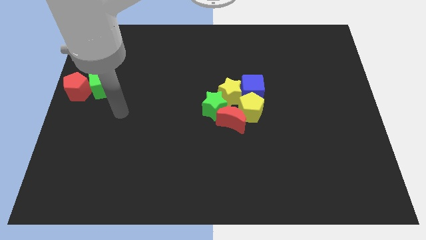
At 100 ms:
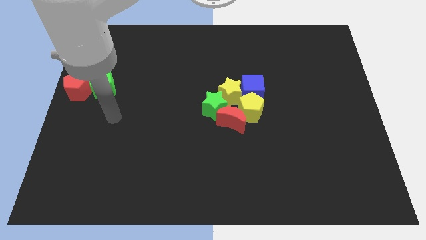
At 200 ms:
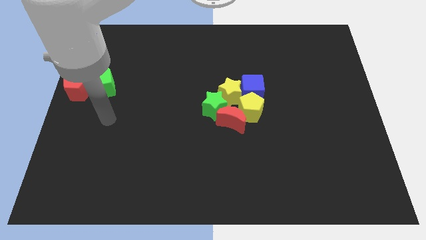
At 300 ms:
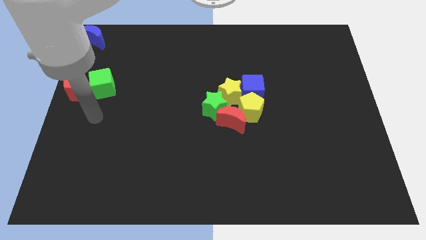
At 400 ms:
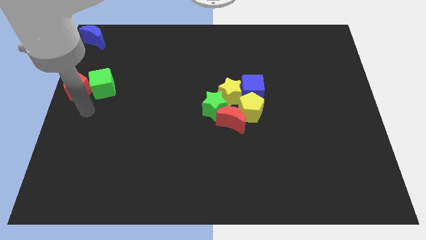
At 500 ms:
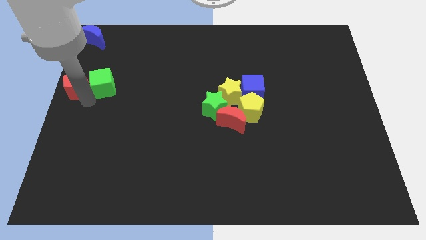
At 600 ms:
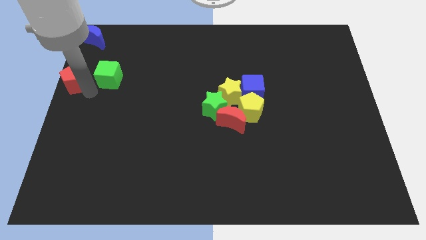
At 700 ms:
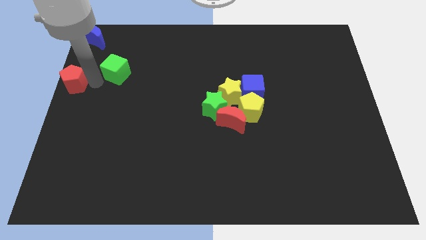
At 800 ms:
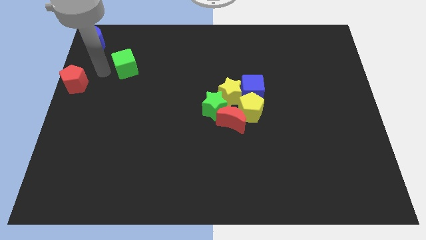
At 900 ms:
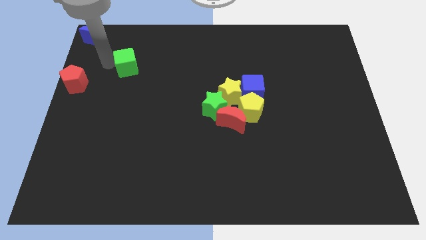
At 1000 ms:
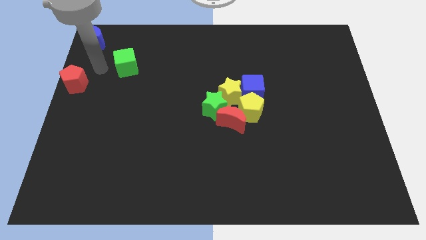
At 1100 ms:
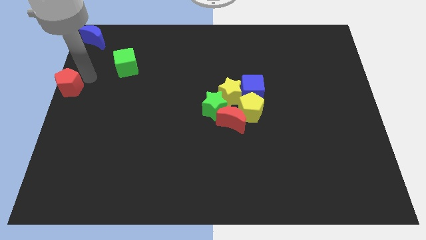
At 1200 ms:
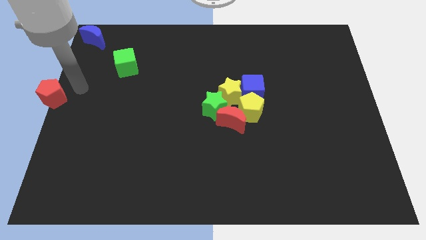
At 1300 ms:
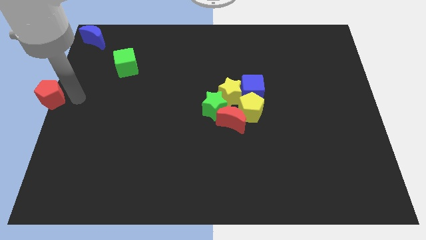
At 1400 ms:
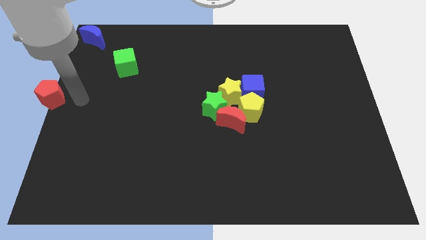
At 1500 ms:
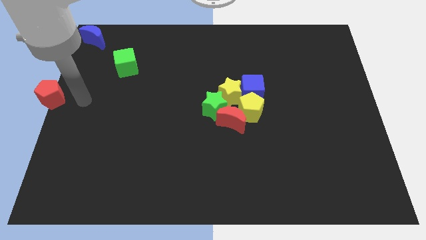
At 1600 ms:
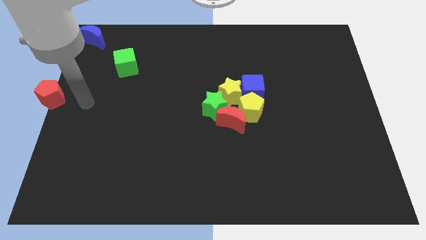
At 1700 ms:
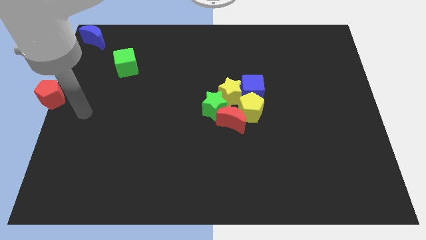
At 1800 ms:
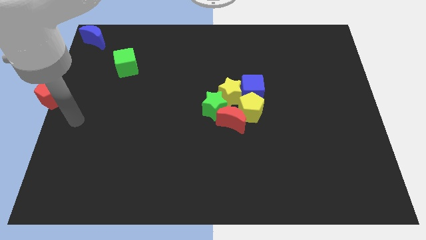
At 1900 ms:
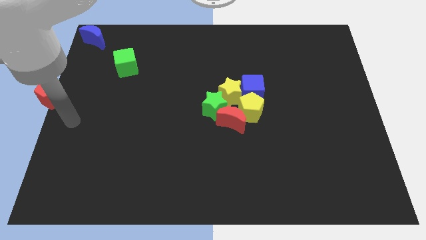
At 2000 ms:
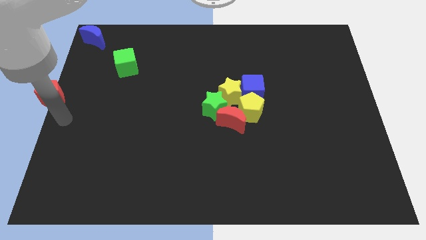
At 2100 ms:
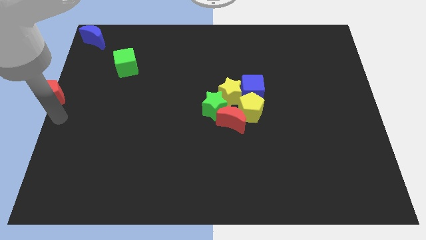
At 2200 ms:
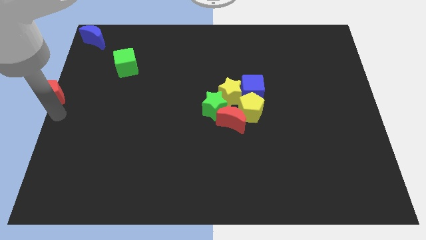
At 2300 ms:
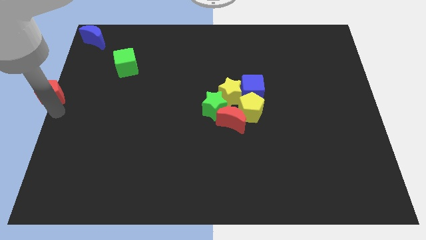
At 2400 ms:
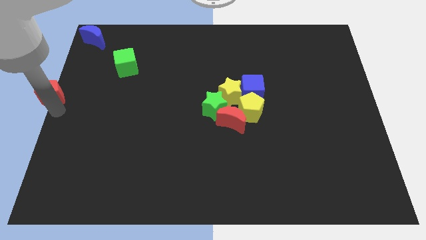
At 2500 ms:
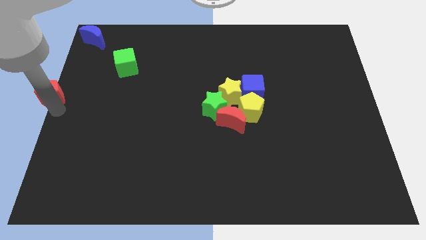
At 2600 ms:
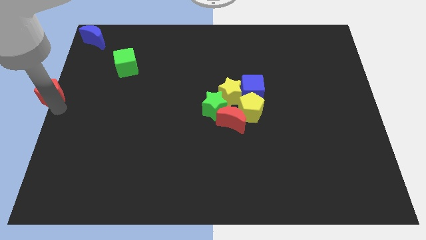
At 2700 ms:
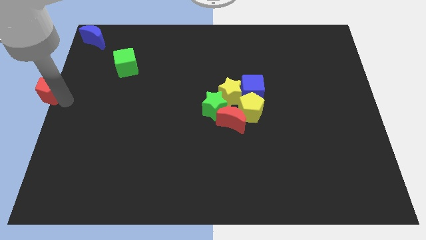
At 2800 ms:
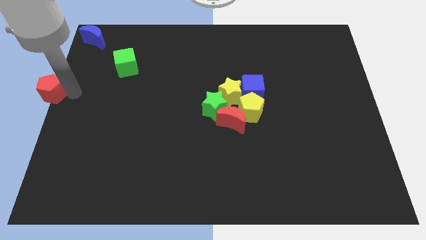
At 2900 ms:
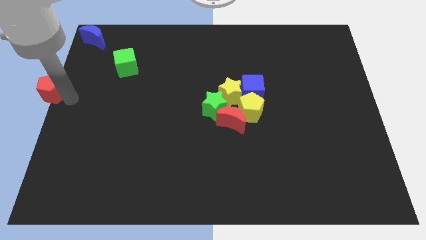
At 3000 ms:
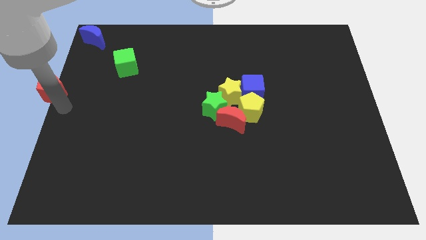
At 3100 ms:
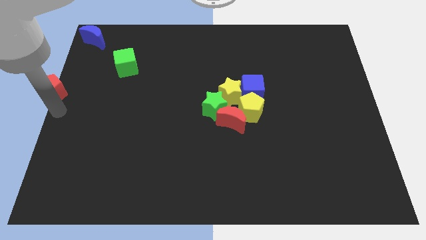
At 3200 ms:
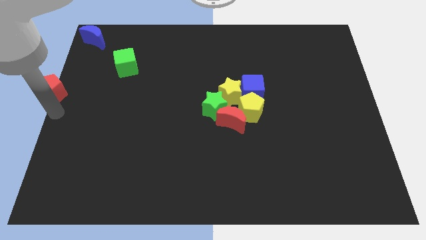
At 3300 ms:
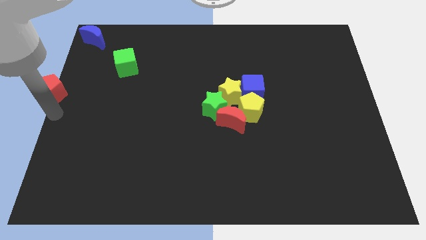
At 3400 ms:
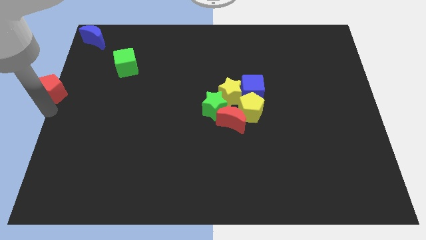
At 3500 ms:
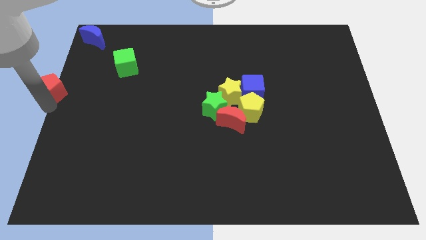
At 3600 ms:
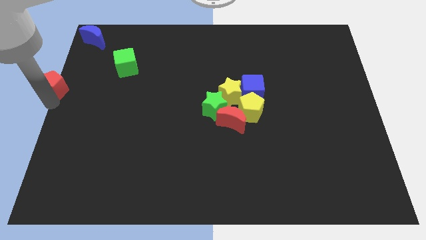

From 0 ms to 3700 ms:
separate the red pentagon from the green cube

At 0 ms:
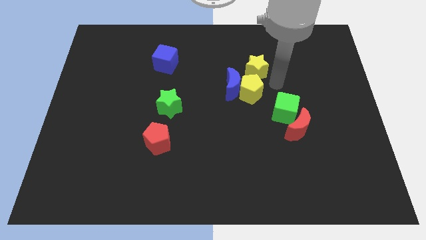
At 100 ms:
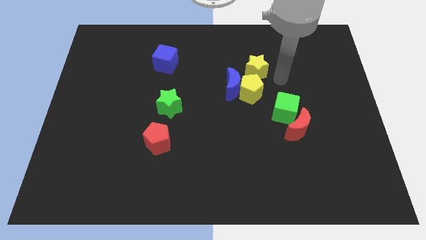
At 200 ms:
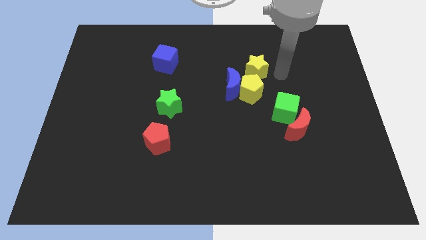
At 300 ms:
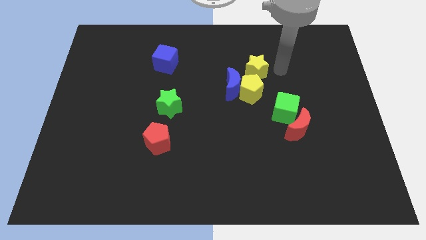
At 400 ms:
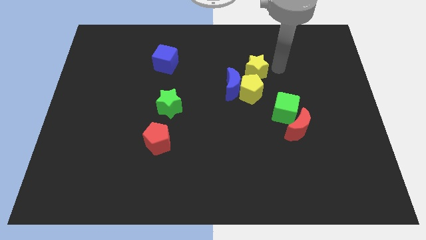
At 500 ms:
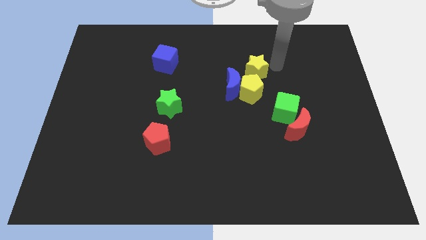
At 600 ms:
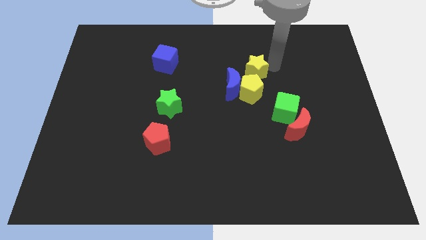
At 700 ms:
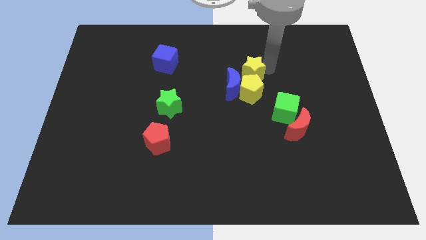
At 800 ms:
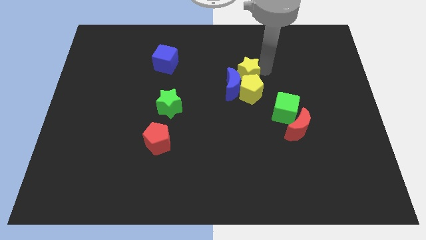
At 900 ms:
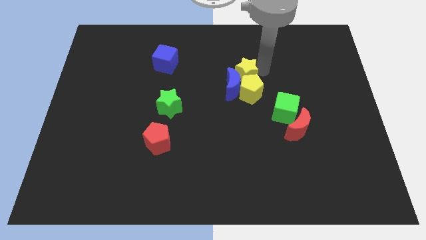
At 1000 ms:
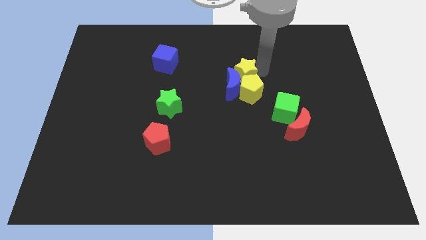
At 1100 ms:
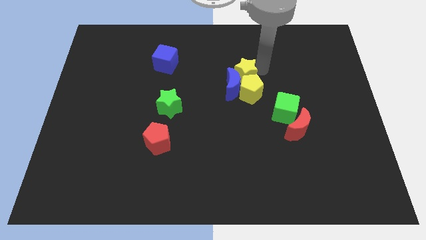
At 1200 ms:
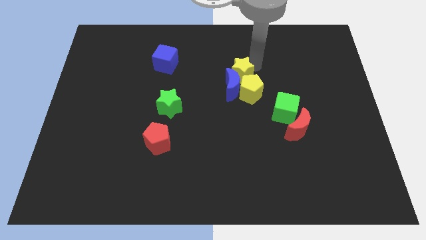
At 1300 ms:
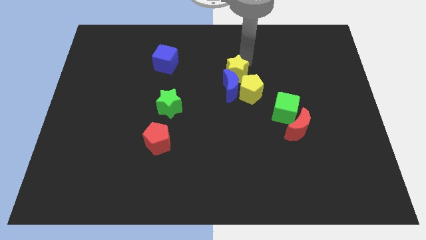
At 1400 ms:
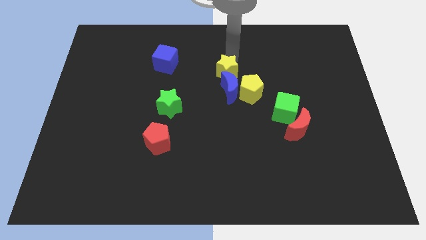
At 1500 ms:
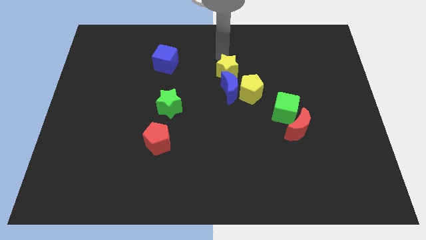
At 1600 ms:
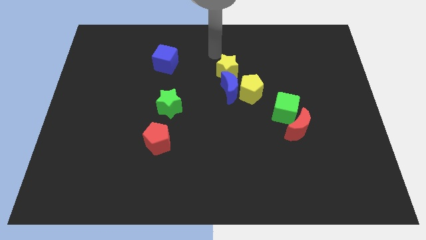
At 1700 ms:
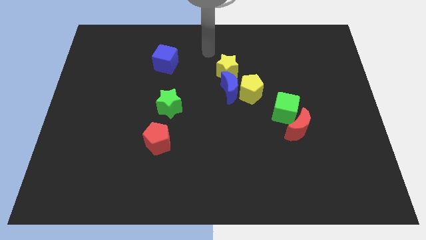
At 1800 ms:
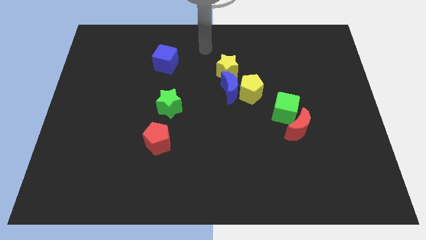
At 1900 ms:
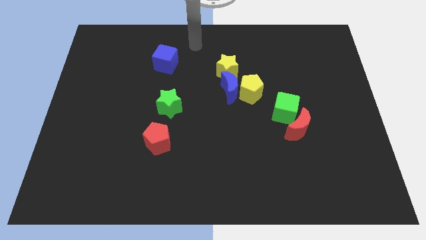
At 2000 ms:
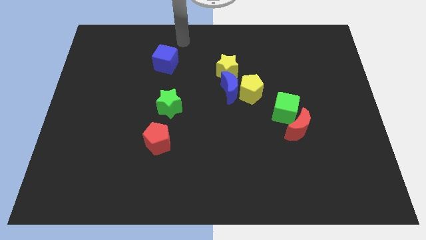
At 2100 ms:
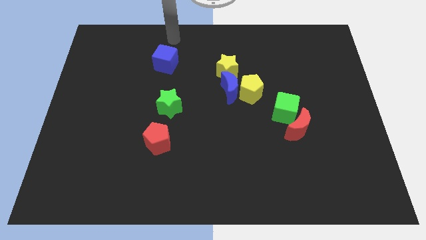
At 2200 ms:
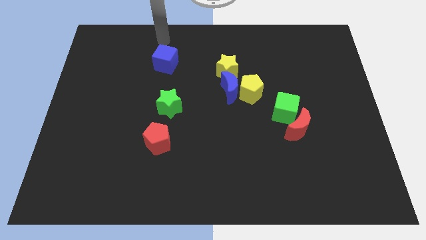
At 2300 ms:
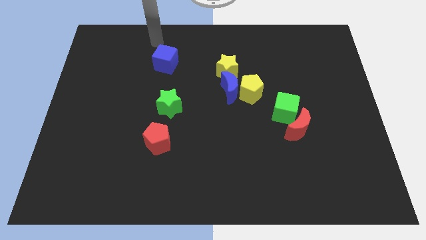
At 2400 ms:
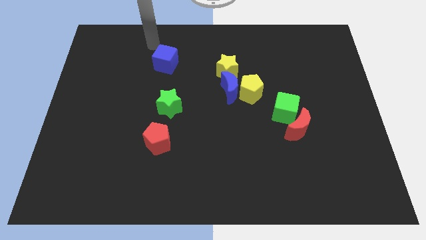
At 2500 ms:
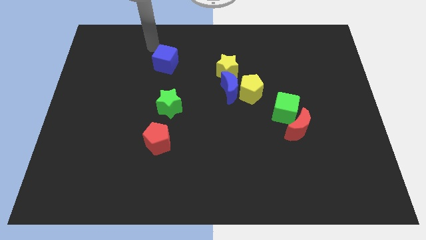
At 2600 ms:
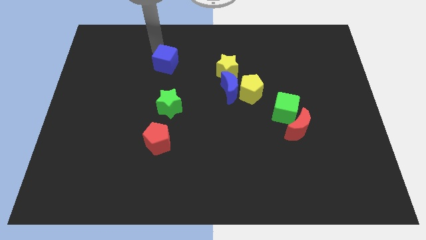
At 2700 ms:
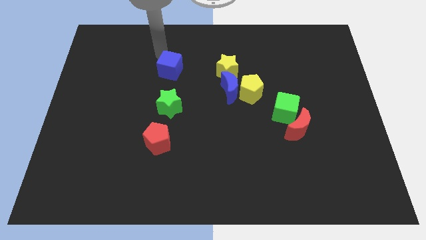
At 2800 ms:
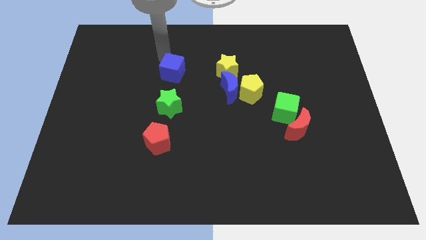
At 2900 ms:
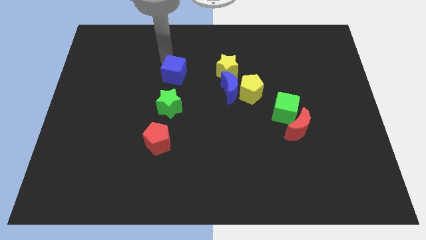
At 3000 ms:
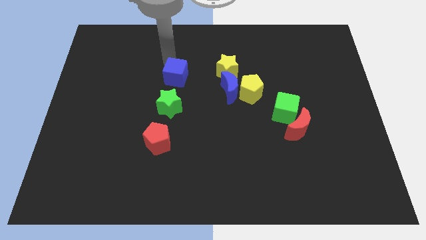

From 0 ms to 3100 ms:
place the blue cube left to the yellow star

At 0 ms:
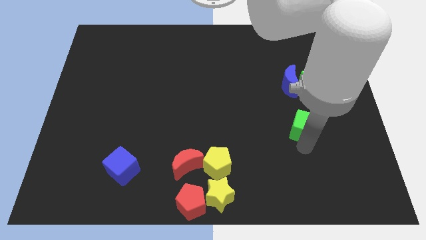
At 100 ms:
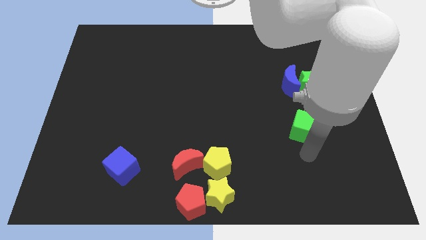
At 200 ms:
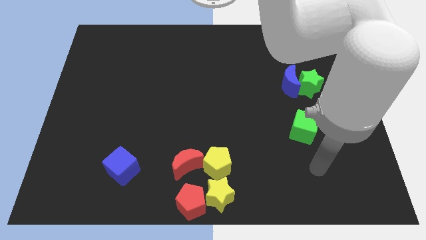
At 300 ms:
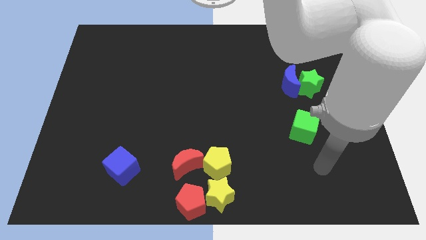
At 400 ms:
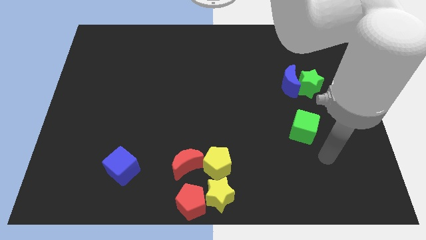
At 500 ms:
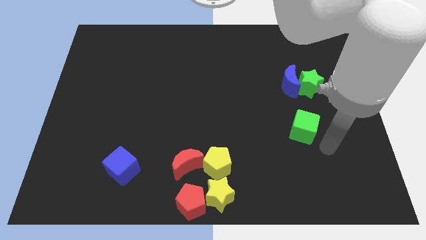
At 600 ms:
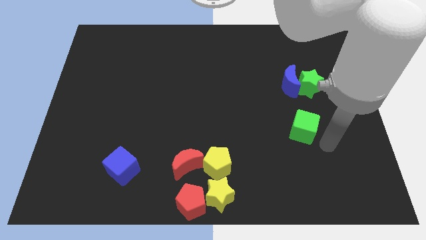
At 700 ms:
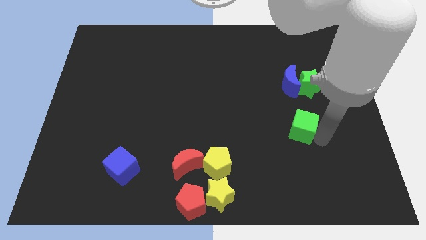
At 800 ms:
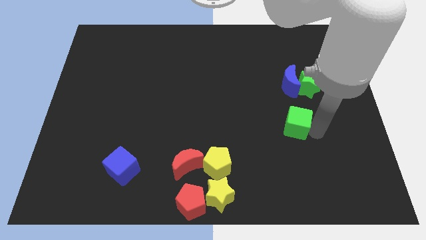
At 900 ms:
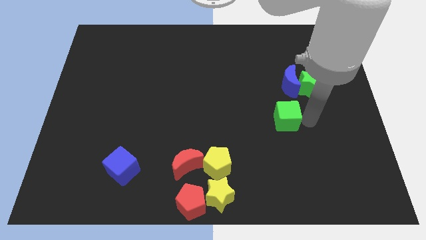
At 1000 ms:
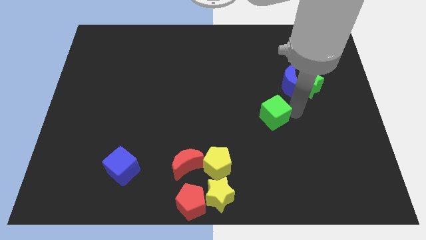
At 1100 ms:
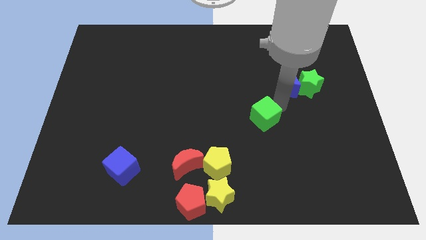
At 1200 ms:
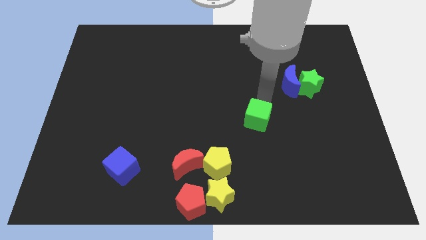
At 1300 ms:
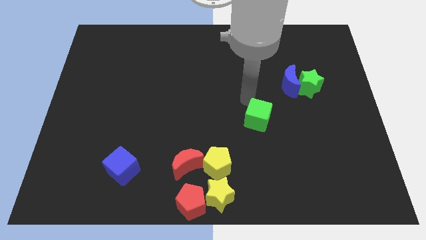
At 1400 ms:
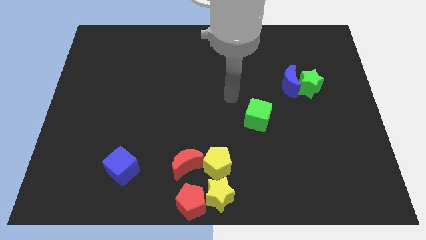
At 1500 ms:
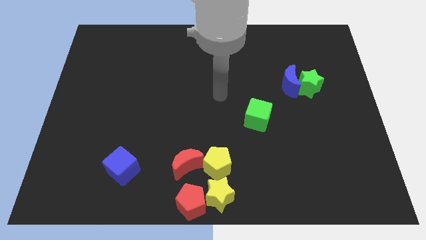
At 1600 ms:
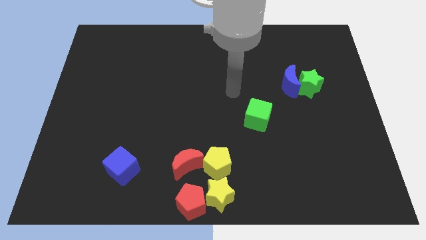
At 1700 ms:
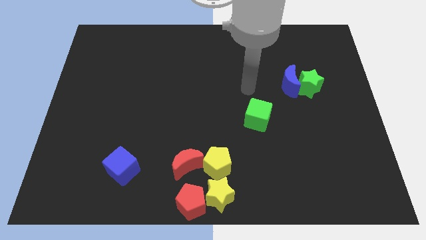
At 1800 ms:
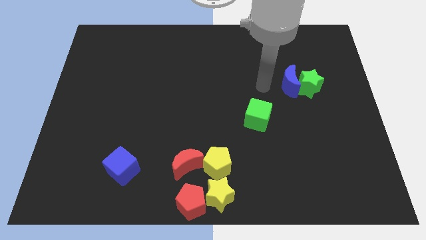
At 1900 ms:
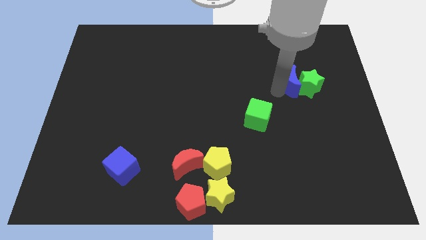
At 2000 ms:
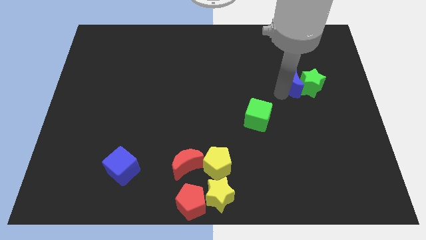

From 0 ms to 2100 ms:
push the green cube diagonally top right yellow pentagon

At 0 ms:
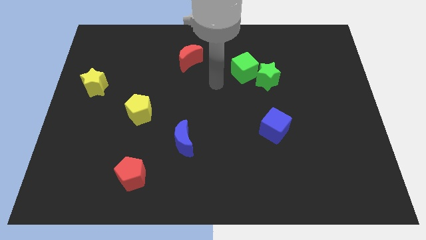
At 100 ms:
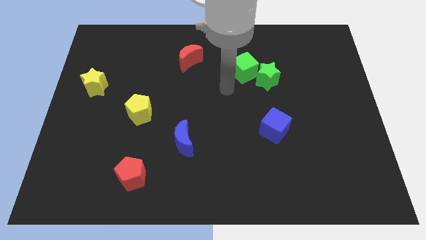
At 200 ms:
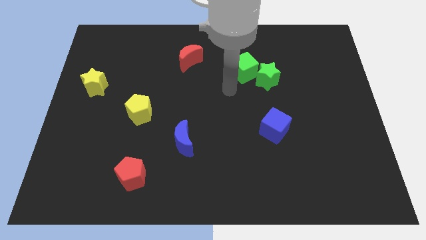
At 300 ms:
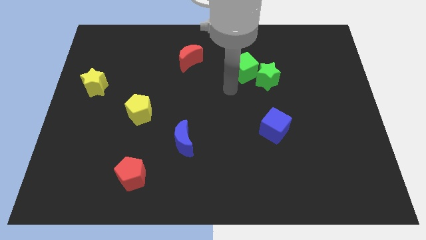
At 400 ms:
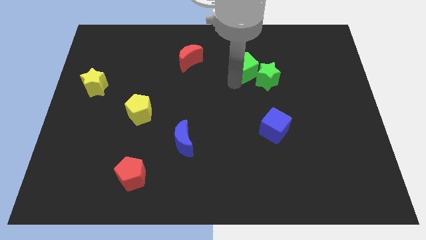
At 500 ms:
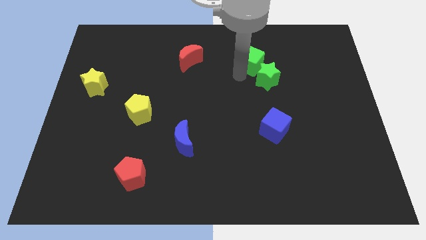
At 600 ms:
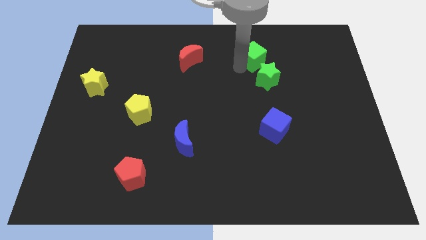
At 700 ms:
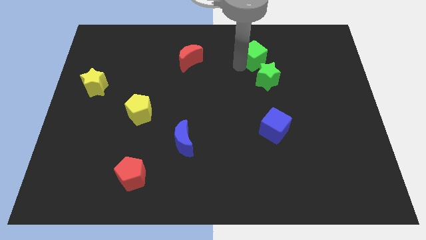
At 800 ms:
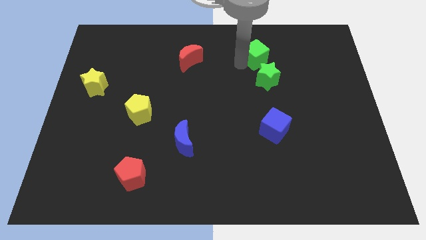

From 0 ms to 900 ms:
move the green cube slightly upward
